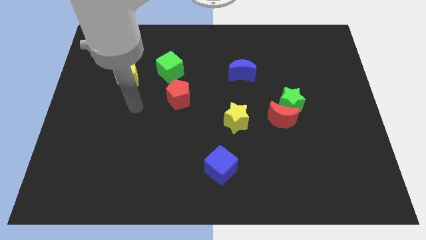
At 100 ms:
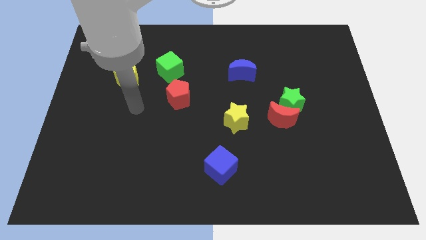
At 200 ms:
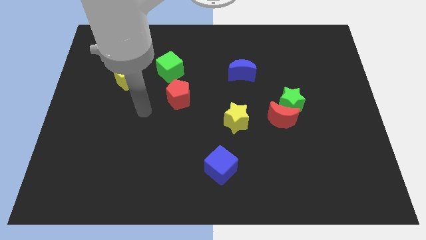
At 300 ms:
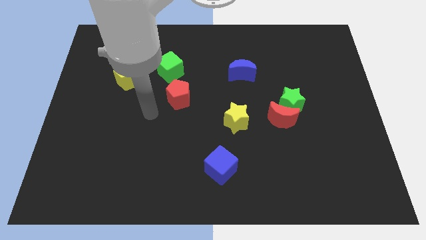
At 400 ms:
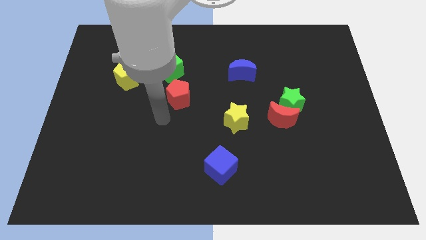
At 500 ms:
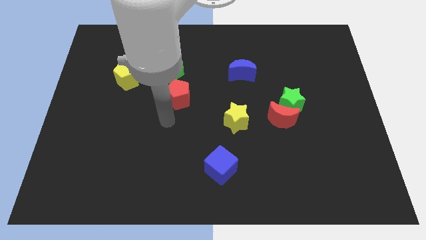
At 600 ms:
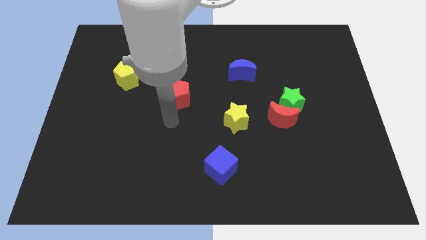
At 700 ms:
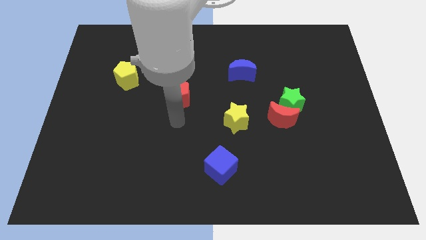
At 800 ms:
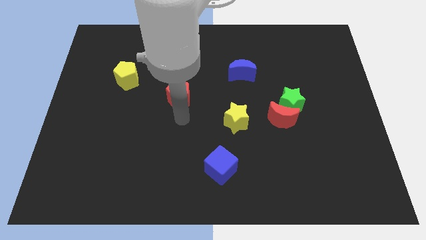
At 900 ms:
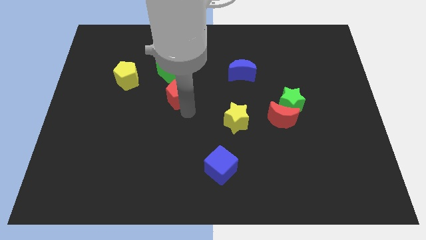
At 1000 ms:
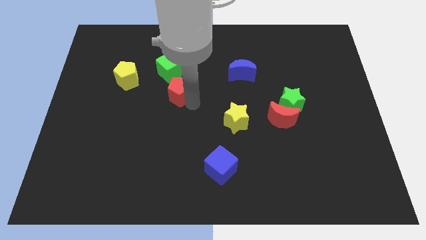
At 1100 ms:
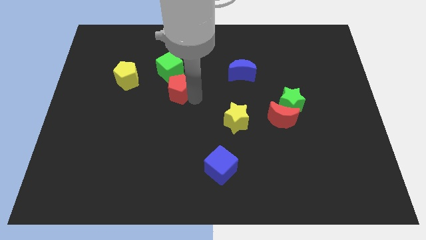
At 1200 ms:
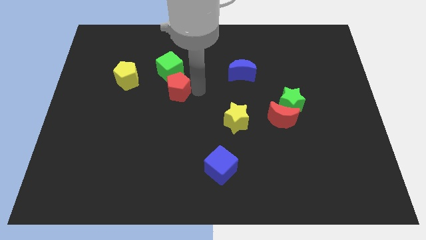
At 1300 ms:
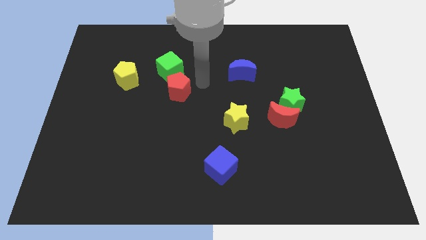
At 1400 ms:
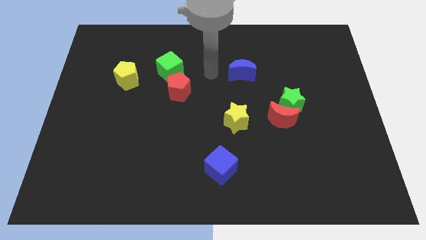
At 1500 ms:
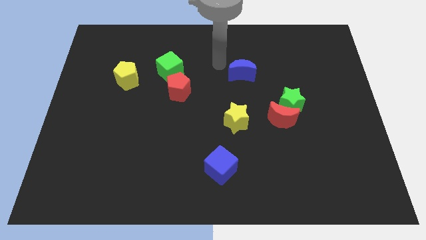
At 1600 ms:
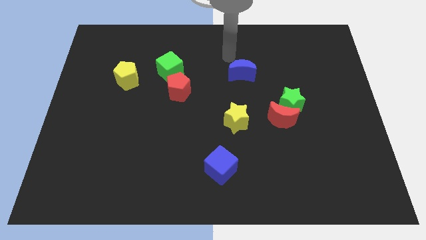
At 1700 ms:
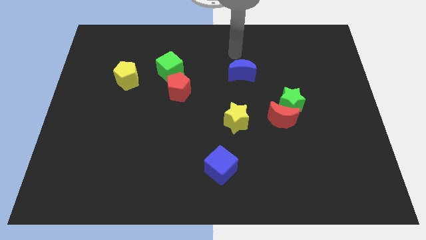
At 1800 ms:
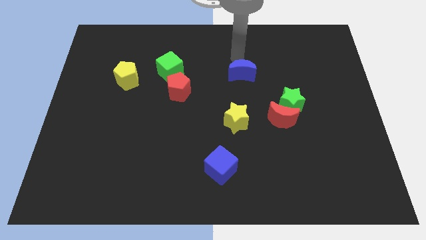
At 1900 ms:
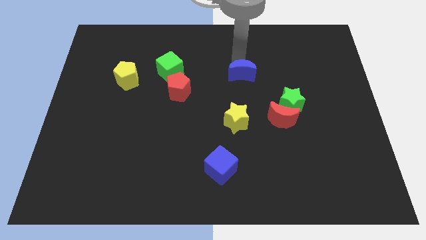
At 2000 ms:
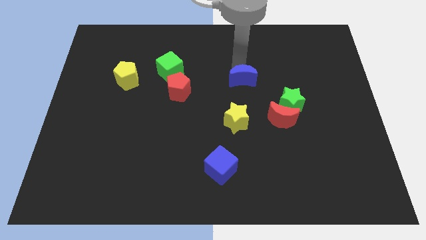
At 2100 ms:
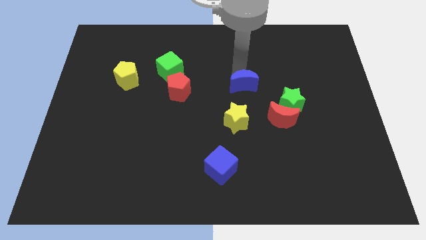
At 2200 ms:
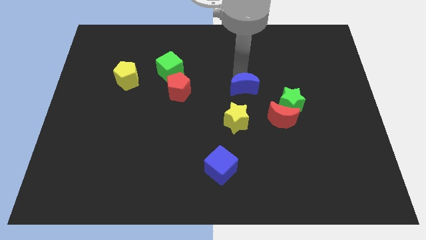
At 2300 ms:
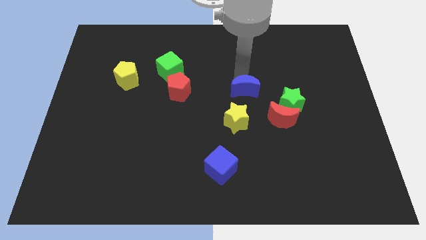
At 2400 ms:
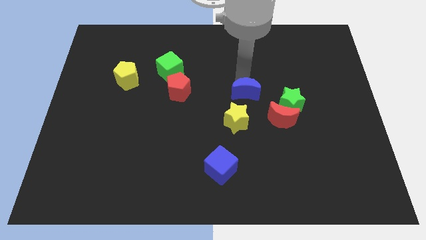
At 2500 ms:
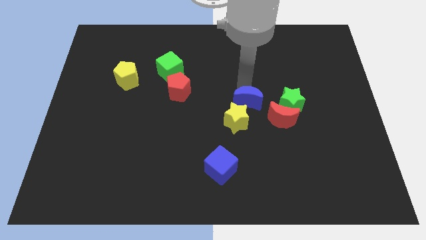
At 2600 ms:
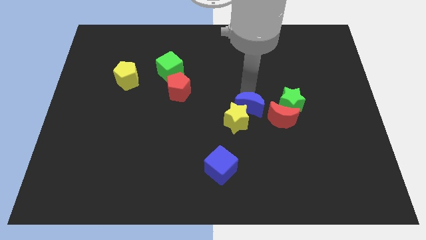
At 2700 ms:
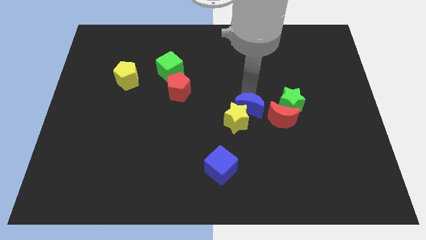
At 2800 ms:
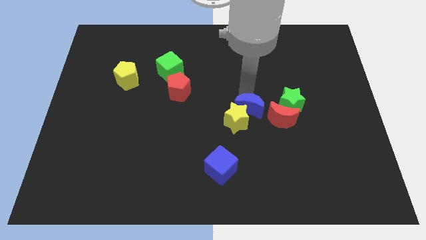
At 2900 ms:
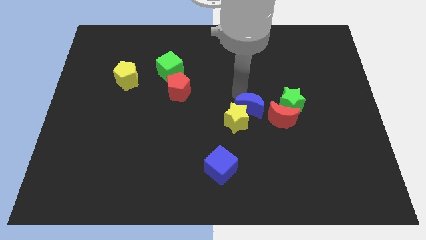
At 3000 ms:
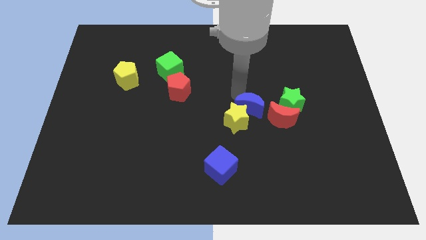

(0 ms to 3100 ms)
place blue crescent right to the yellow star

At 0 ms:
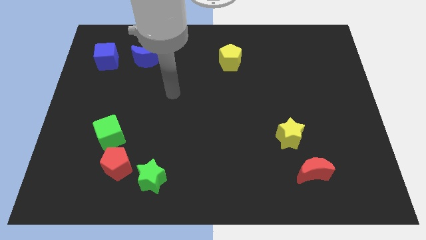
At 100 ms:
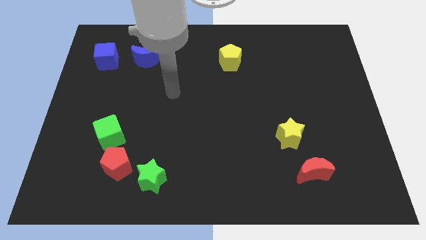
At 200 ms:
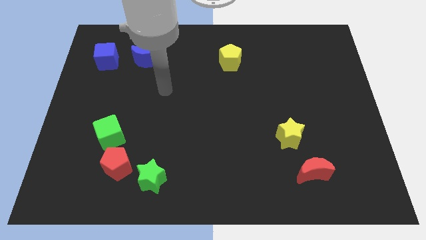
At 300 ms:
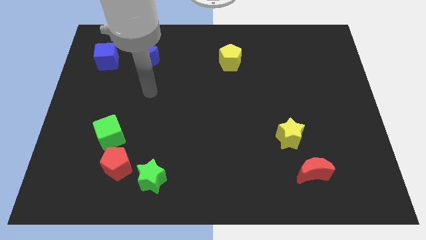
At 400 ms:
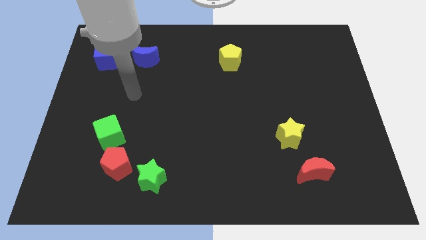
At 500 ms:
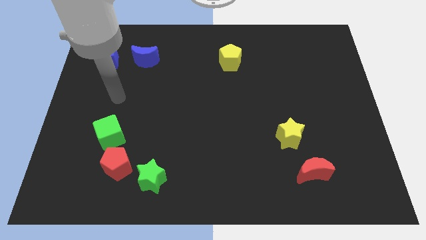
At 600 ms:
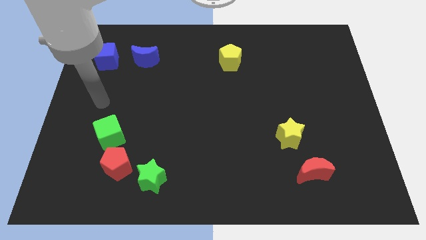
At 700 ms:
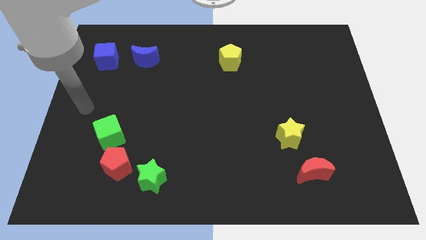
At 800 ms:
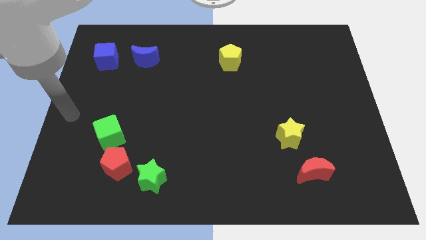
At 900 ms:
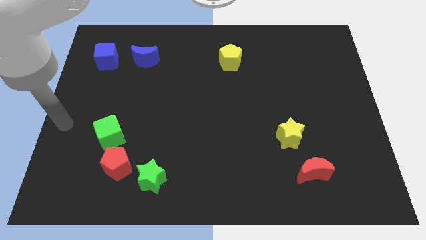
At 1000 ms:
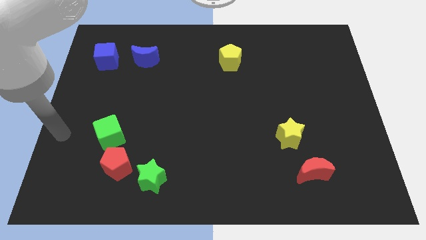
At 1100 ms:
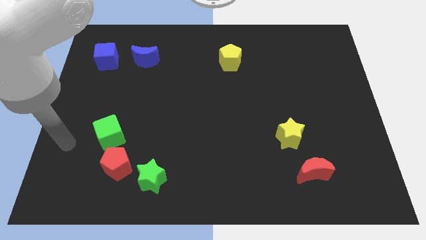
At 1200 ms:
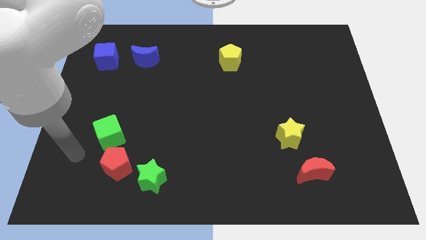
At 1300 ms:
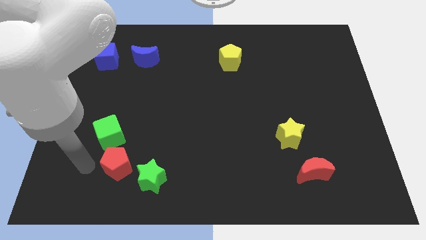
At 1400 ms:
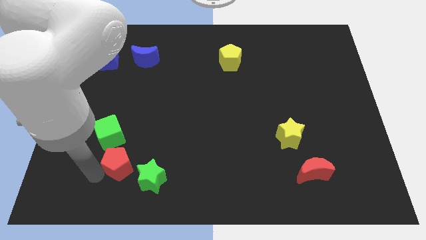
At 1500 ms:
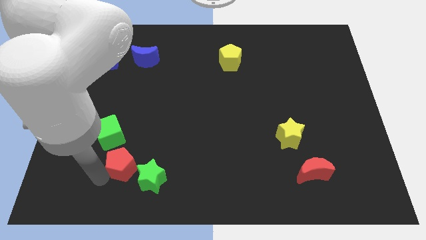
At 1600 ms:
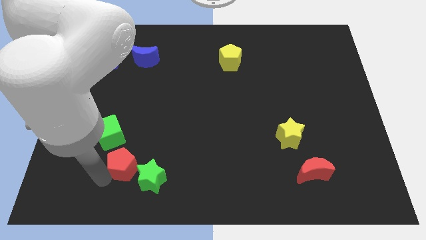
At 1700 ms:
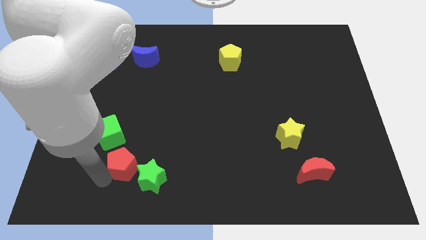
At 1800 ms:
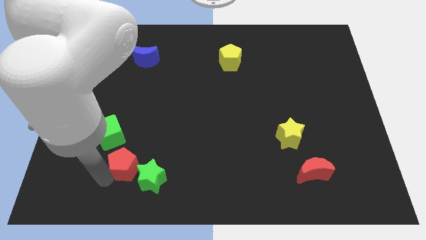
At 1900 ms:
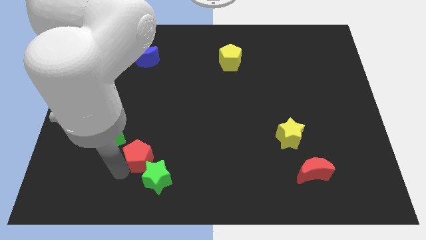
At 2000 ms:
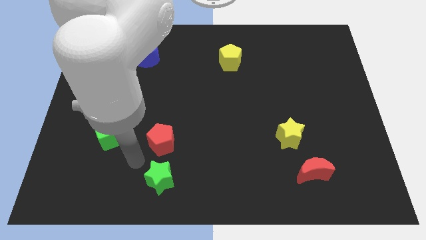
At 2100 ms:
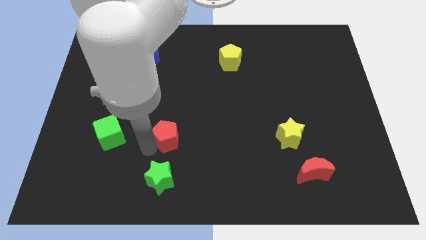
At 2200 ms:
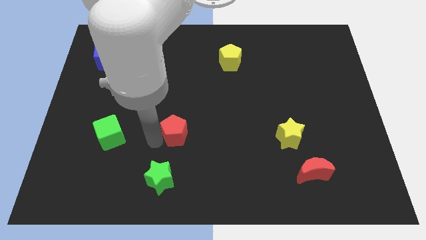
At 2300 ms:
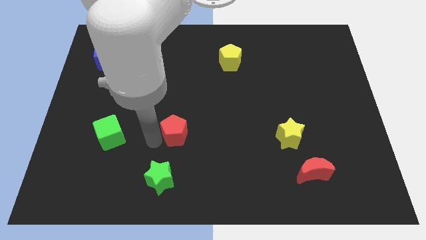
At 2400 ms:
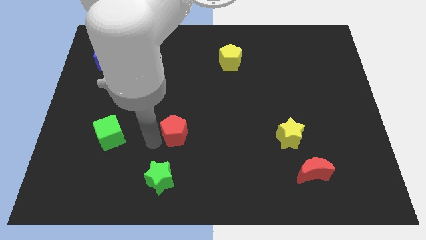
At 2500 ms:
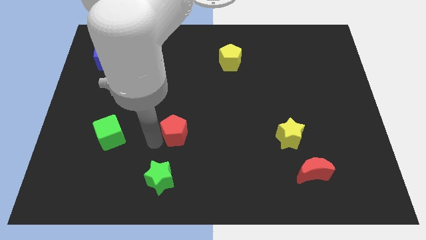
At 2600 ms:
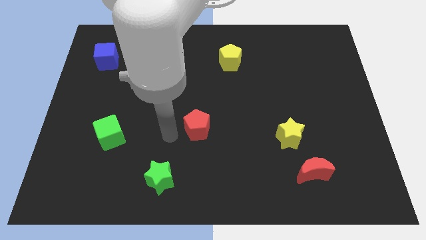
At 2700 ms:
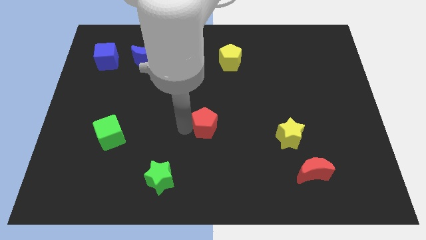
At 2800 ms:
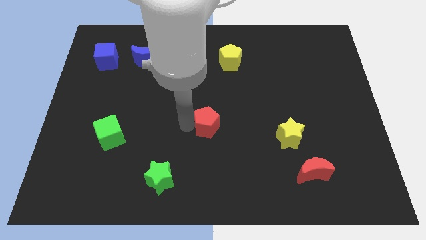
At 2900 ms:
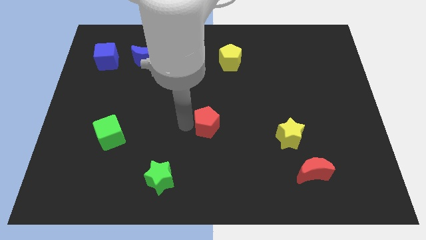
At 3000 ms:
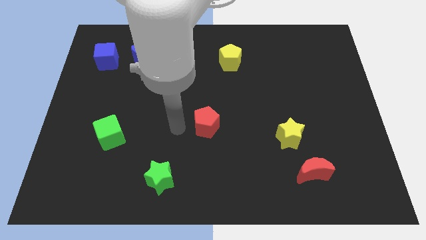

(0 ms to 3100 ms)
place the red pentagon diagonally above the top right side of the green star

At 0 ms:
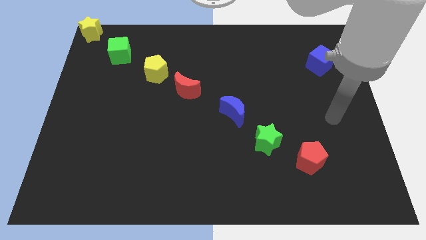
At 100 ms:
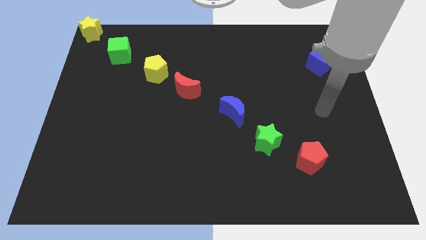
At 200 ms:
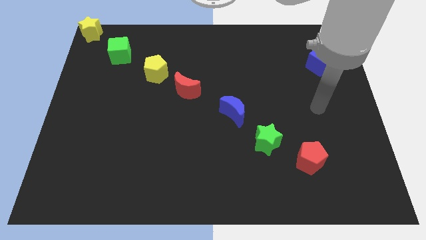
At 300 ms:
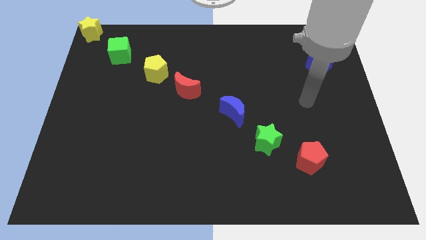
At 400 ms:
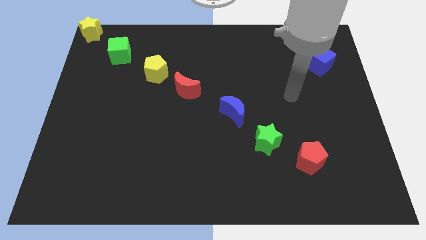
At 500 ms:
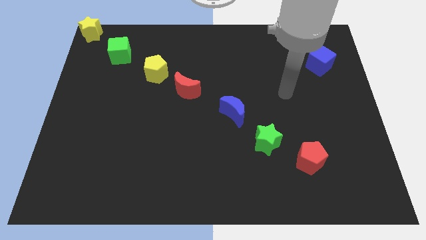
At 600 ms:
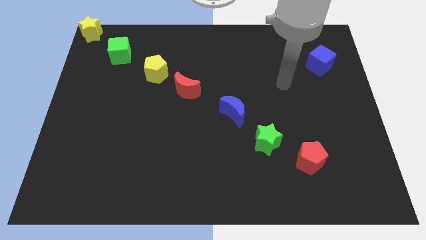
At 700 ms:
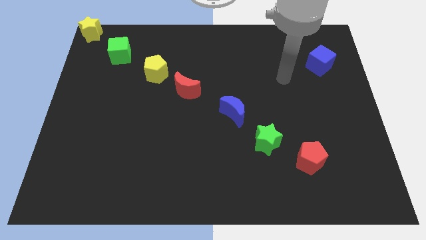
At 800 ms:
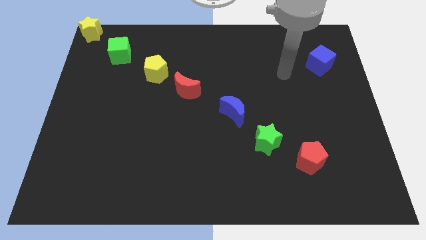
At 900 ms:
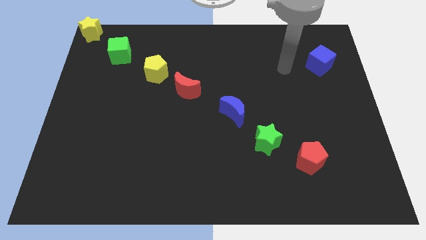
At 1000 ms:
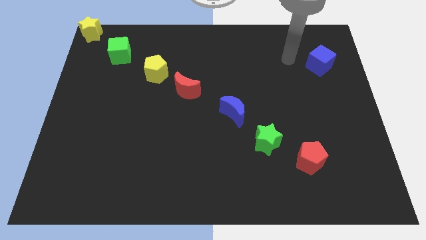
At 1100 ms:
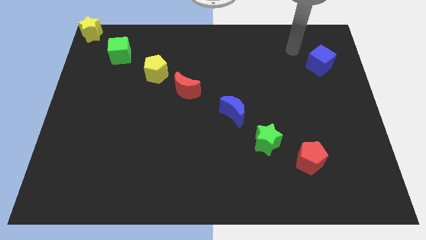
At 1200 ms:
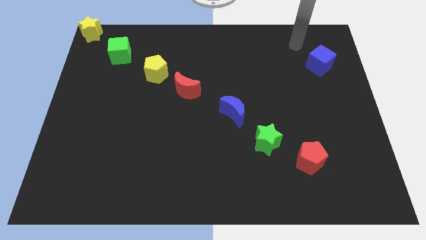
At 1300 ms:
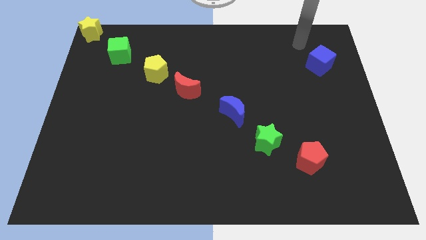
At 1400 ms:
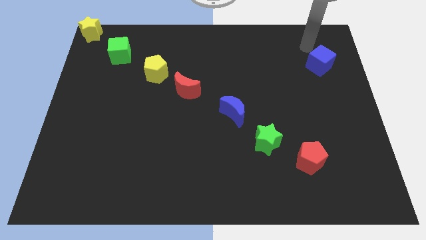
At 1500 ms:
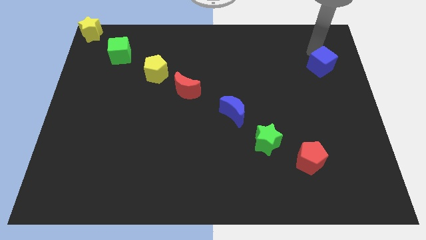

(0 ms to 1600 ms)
place your arm to the top of the blue cube

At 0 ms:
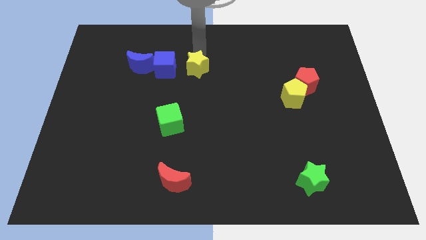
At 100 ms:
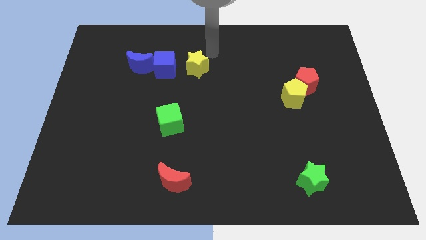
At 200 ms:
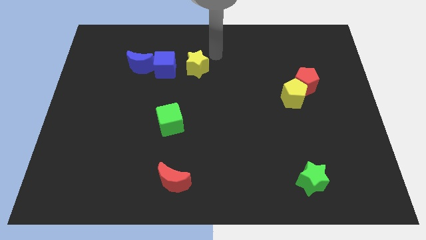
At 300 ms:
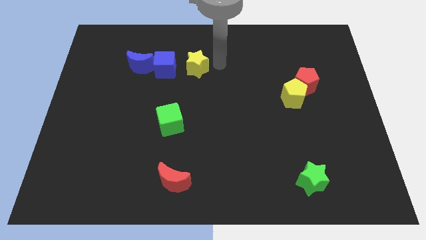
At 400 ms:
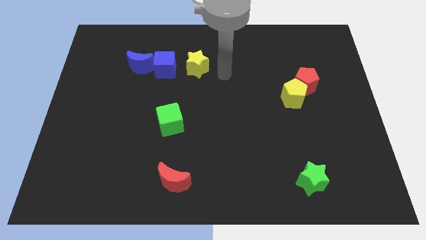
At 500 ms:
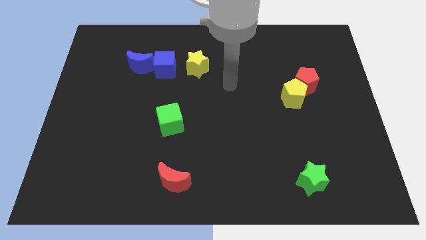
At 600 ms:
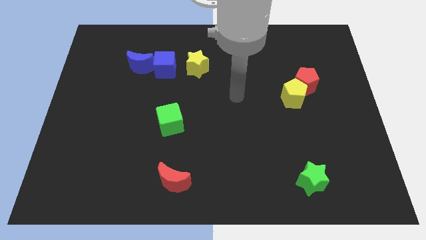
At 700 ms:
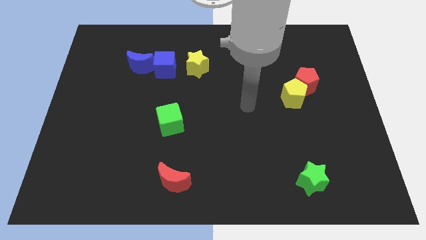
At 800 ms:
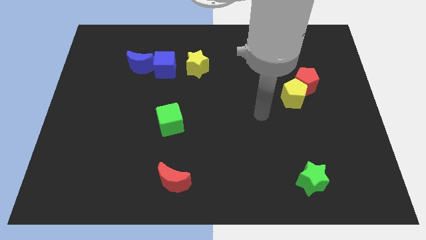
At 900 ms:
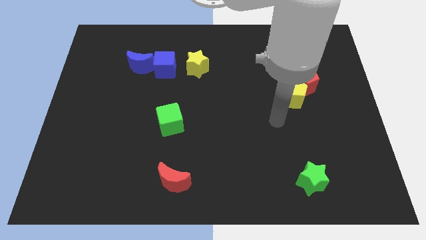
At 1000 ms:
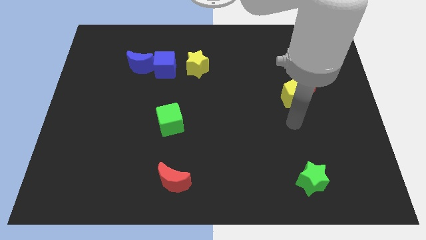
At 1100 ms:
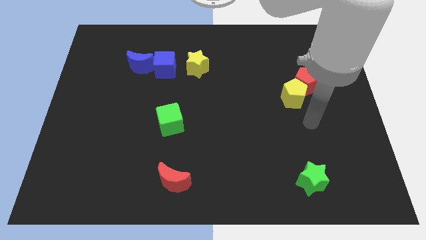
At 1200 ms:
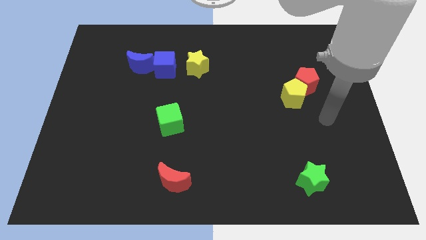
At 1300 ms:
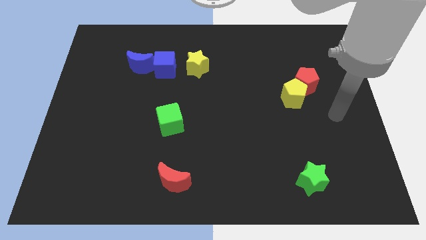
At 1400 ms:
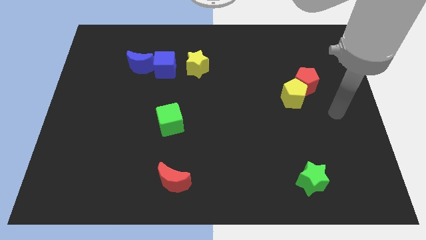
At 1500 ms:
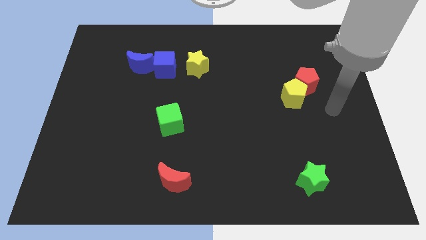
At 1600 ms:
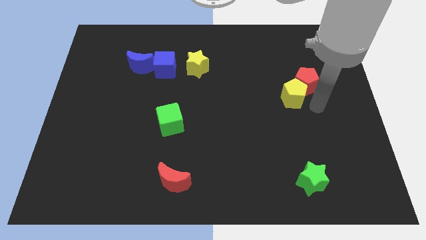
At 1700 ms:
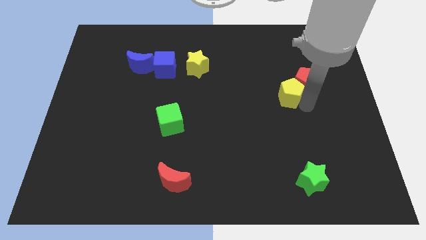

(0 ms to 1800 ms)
place your arm to the right of the yellow pentagon
